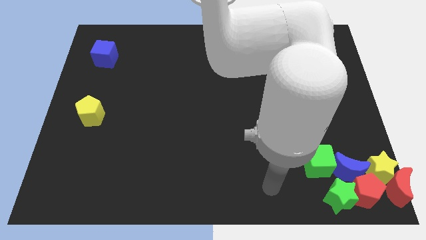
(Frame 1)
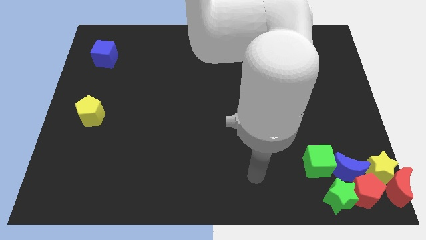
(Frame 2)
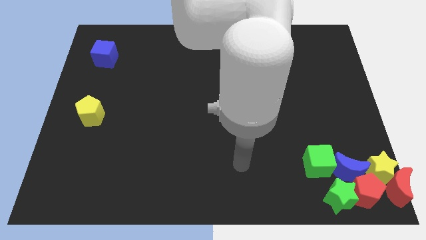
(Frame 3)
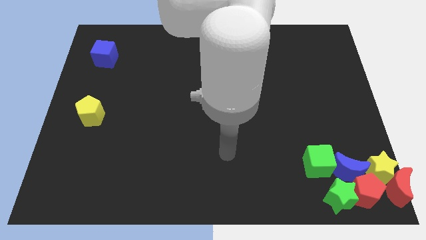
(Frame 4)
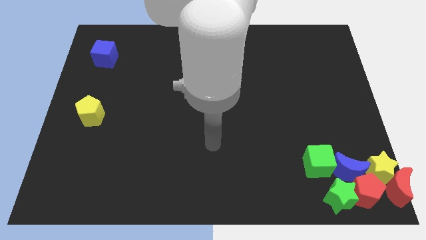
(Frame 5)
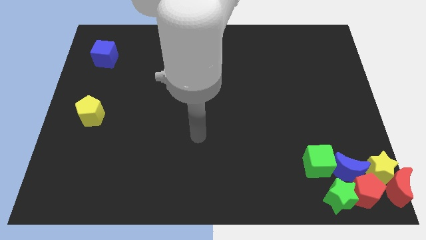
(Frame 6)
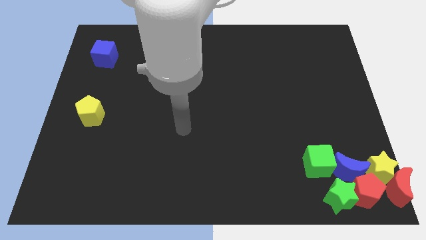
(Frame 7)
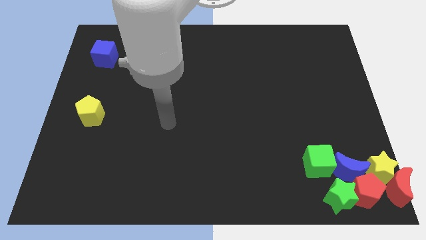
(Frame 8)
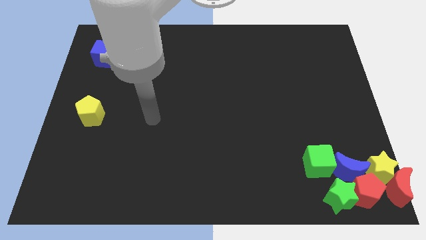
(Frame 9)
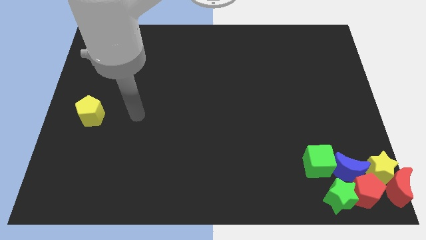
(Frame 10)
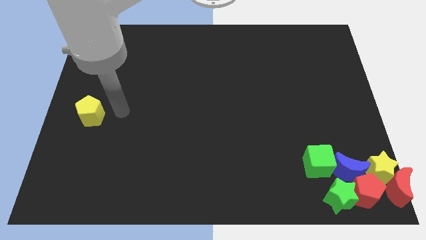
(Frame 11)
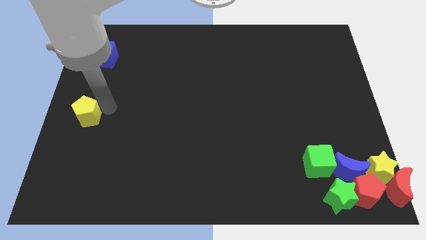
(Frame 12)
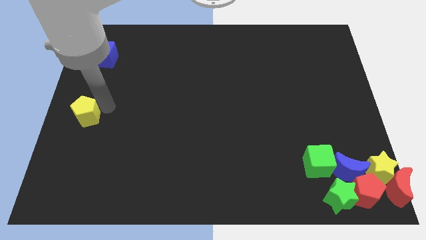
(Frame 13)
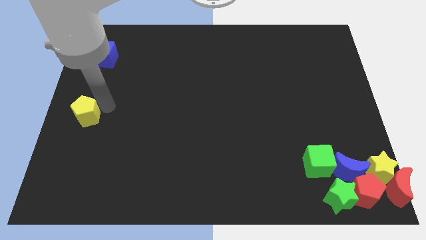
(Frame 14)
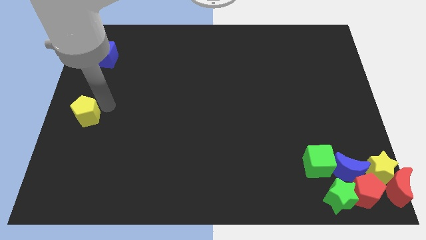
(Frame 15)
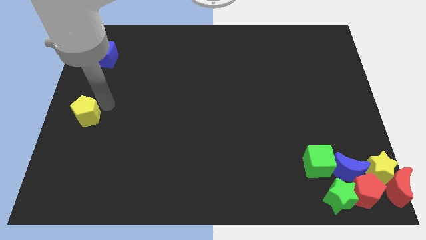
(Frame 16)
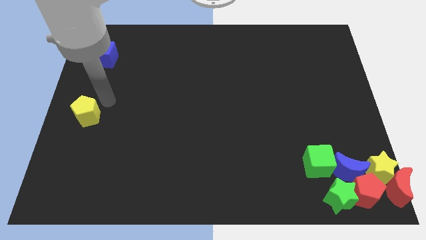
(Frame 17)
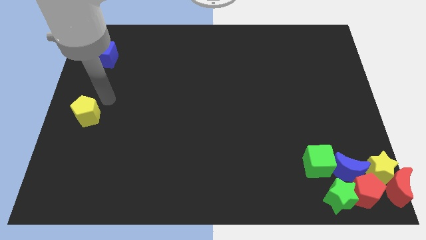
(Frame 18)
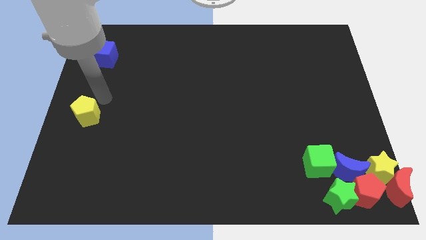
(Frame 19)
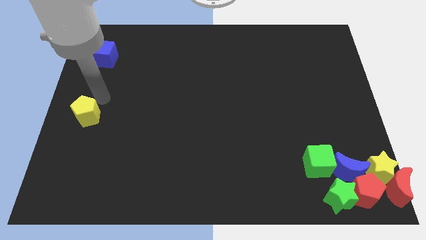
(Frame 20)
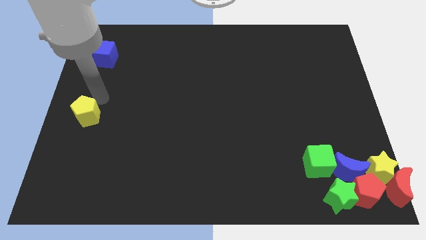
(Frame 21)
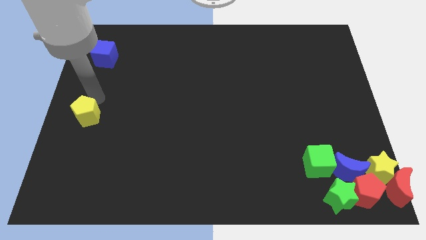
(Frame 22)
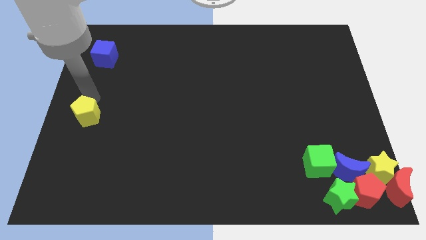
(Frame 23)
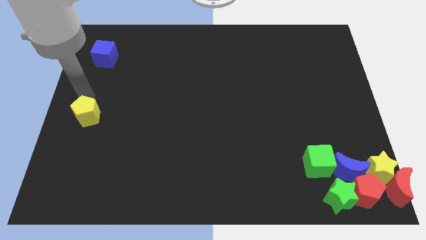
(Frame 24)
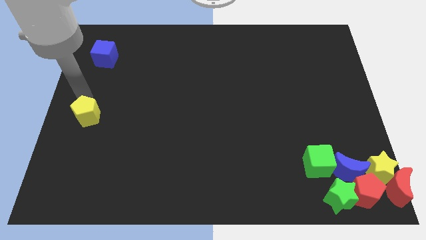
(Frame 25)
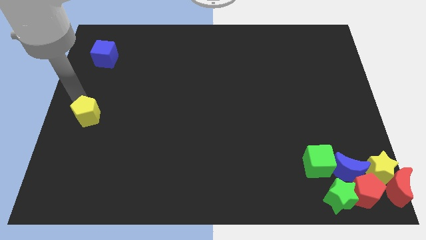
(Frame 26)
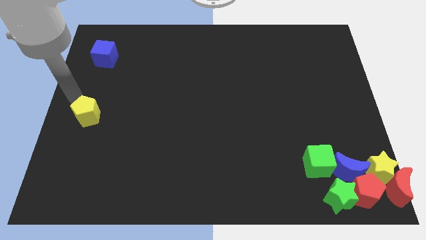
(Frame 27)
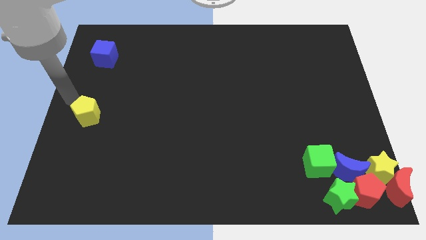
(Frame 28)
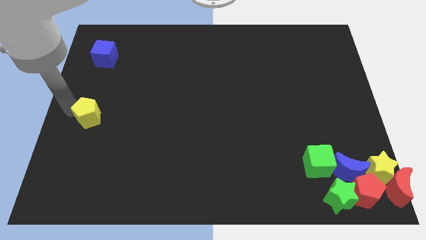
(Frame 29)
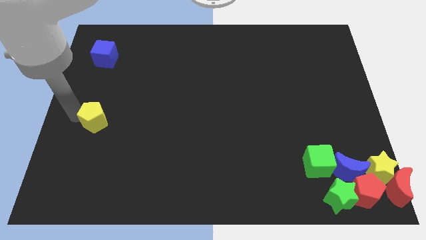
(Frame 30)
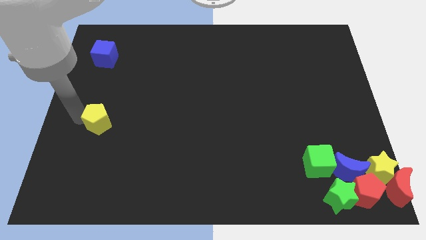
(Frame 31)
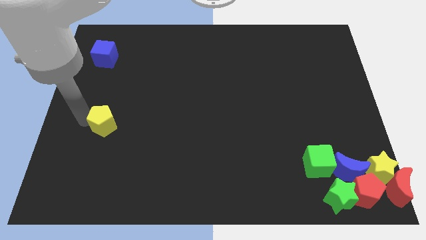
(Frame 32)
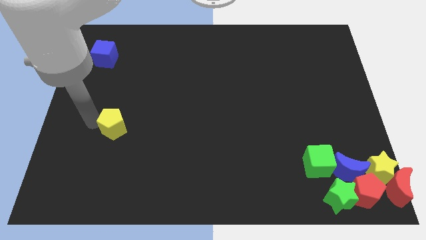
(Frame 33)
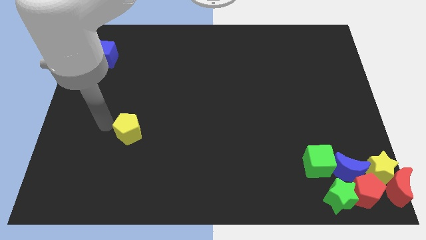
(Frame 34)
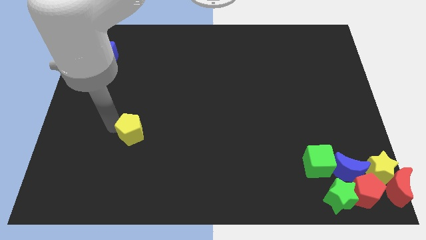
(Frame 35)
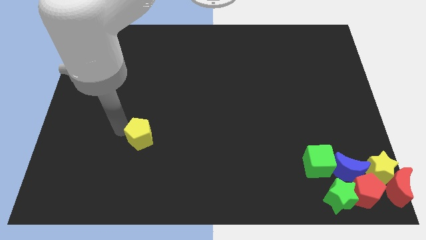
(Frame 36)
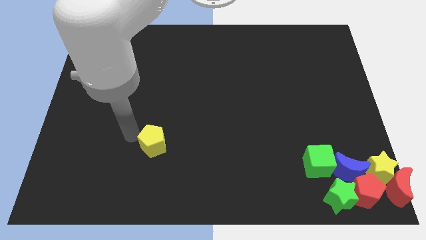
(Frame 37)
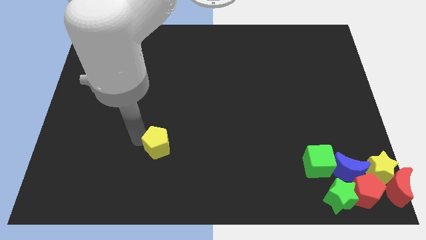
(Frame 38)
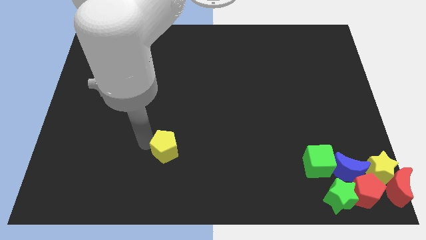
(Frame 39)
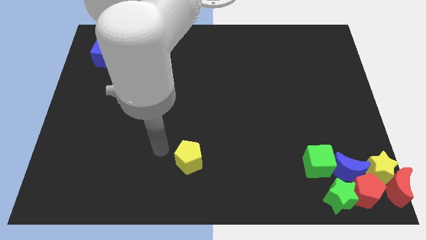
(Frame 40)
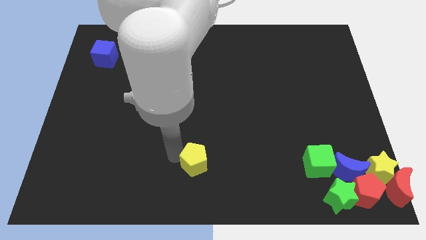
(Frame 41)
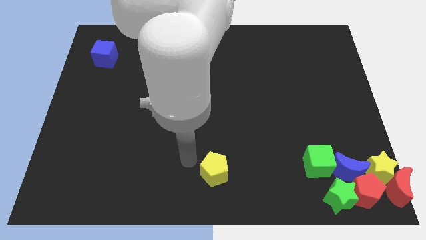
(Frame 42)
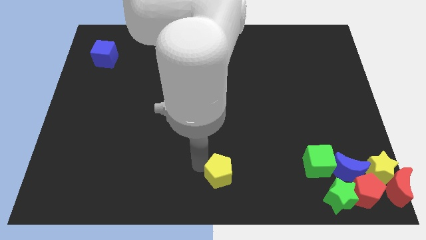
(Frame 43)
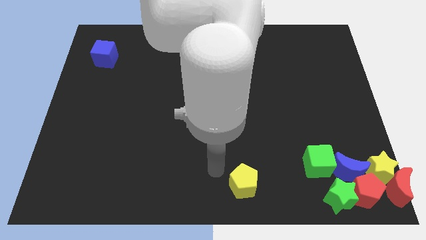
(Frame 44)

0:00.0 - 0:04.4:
move yellow pentagon towards the bottom of the board

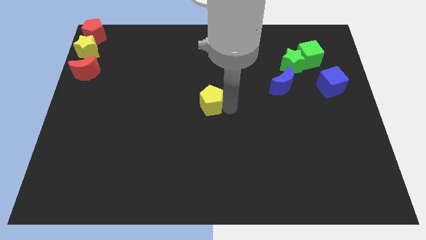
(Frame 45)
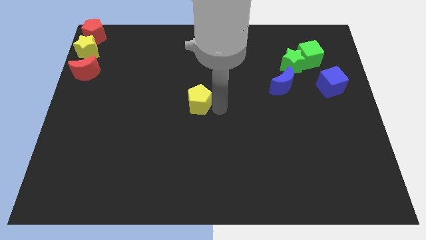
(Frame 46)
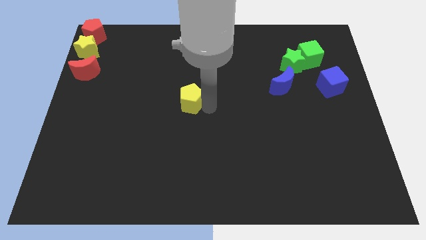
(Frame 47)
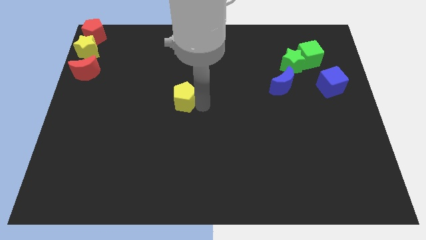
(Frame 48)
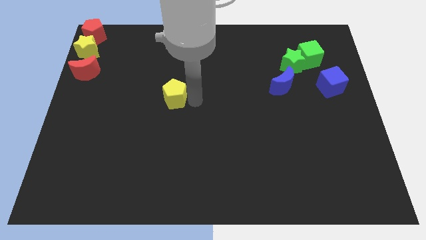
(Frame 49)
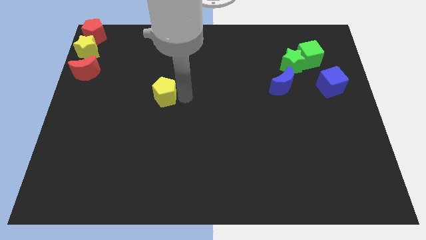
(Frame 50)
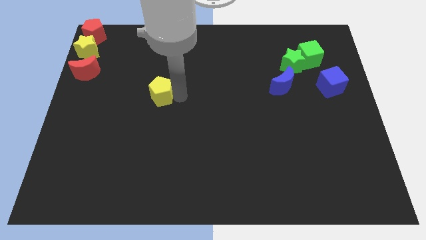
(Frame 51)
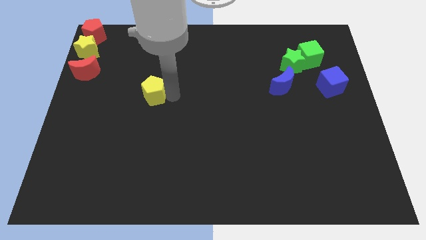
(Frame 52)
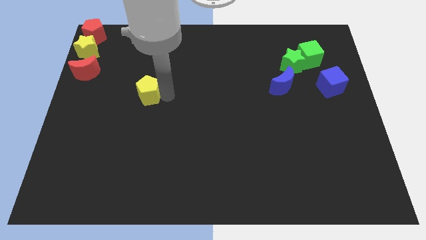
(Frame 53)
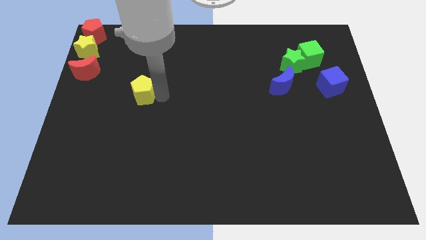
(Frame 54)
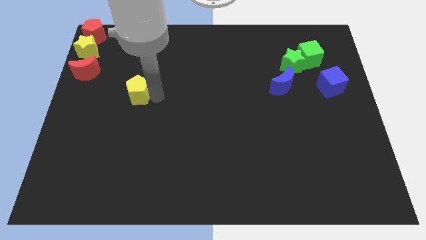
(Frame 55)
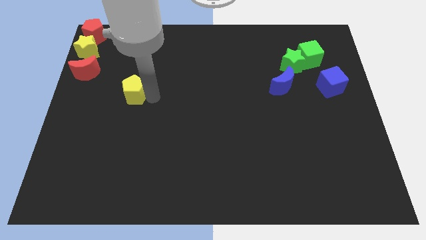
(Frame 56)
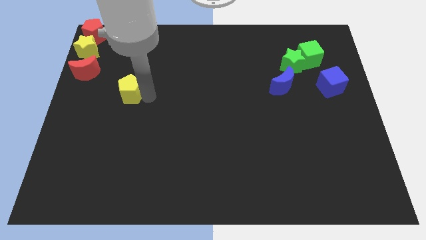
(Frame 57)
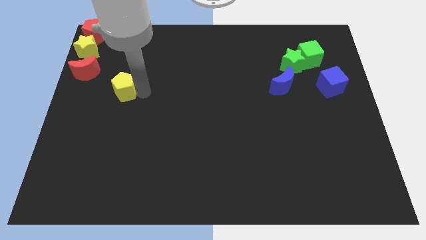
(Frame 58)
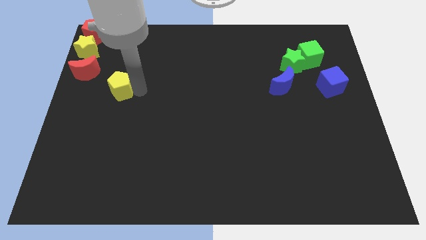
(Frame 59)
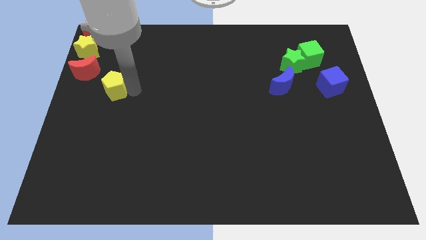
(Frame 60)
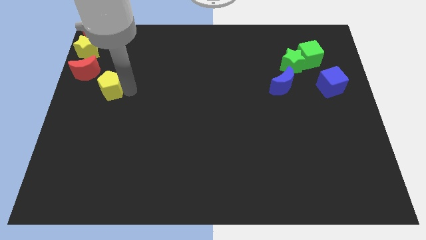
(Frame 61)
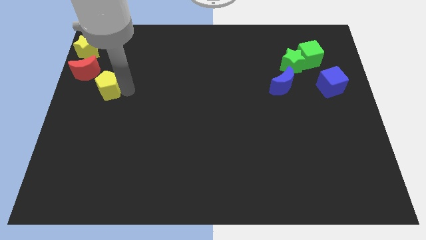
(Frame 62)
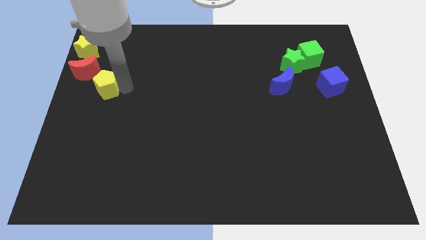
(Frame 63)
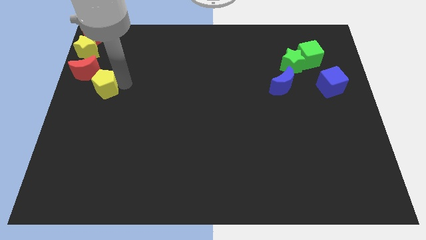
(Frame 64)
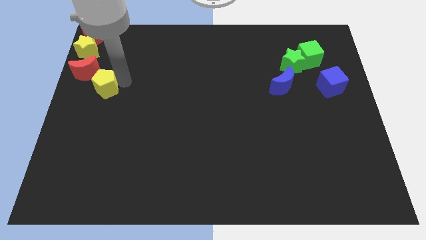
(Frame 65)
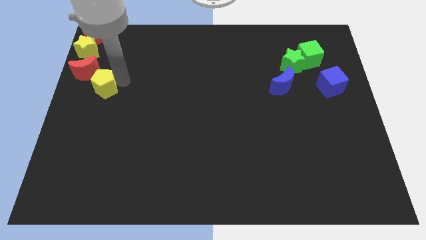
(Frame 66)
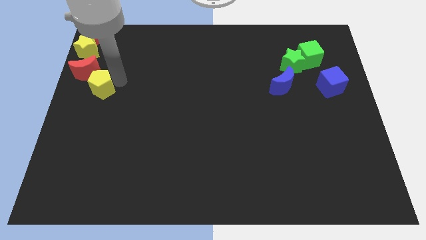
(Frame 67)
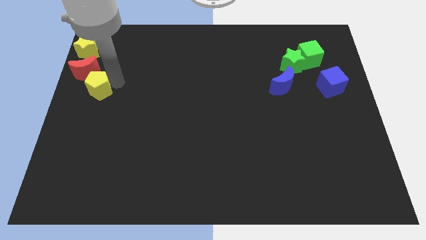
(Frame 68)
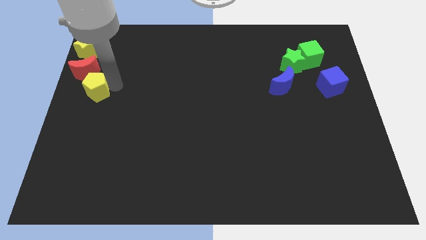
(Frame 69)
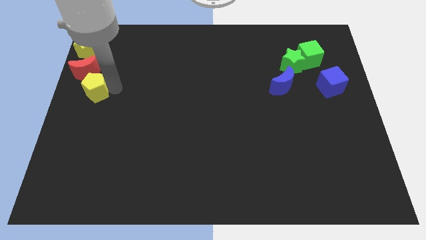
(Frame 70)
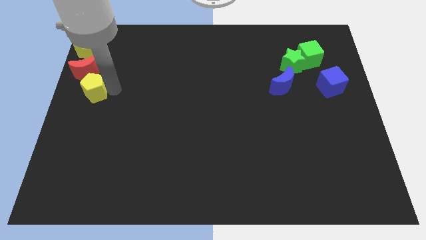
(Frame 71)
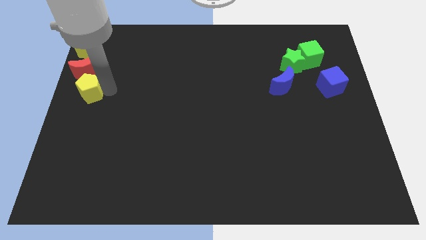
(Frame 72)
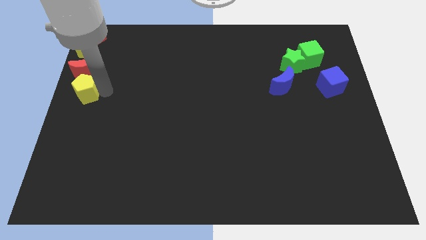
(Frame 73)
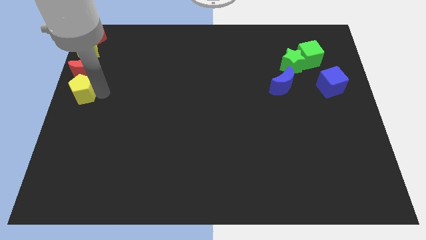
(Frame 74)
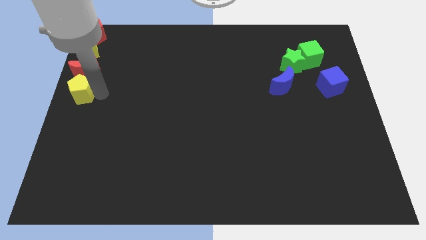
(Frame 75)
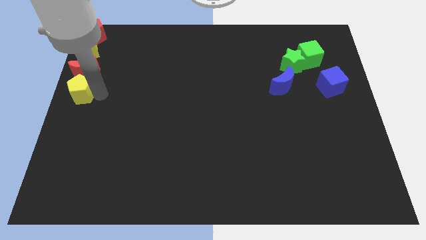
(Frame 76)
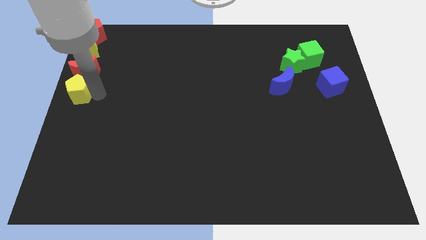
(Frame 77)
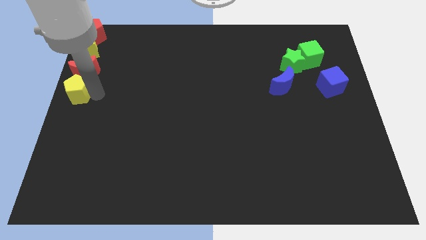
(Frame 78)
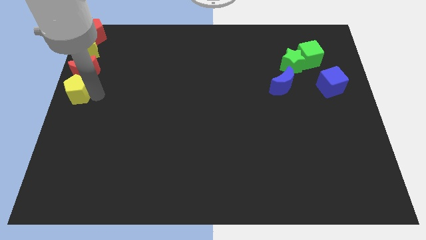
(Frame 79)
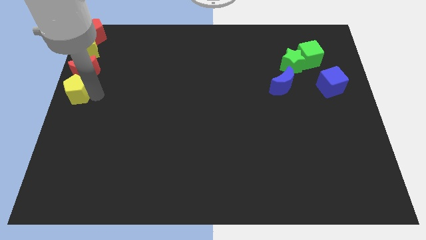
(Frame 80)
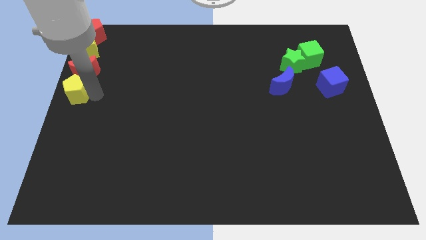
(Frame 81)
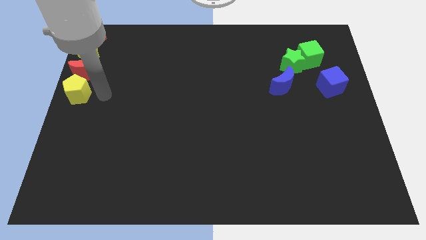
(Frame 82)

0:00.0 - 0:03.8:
place the yellow pentagon below the red moon

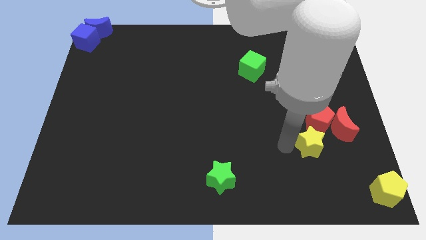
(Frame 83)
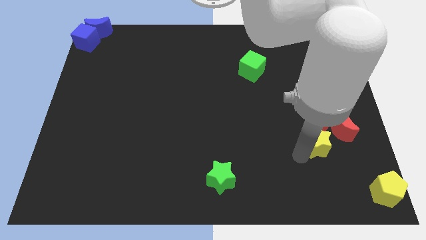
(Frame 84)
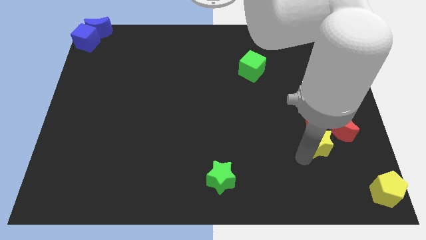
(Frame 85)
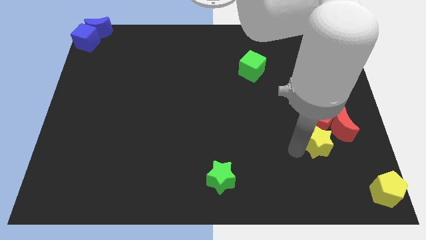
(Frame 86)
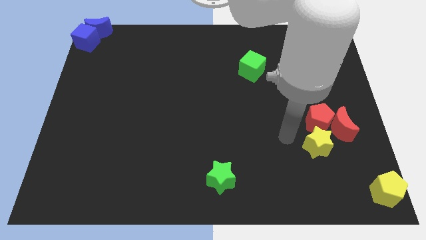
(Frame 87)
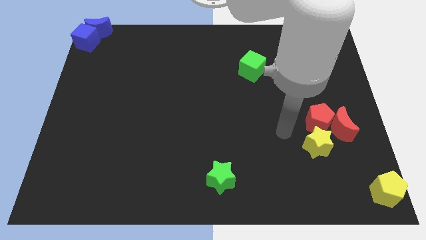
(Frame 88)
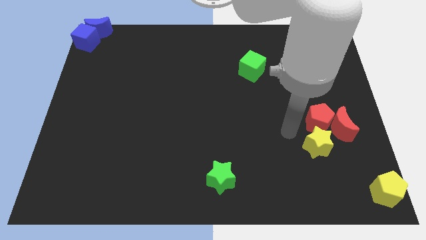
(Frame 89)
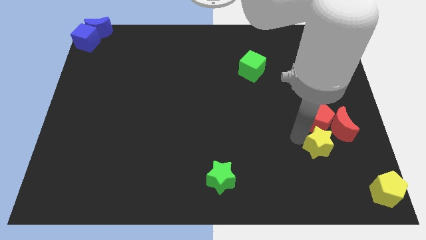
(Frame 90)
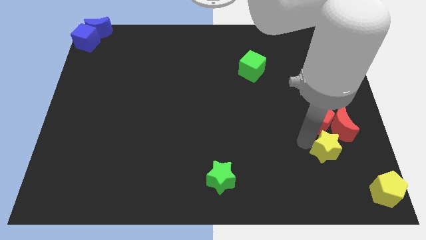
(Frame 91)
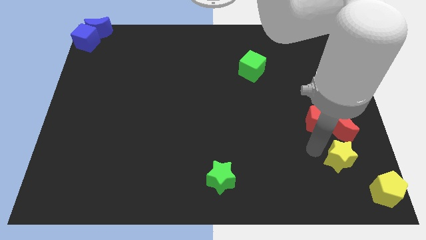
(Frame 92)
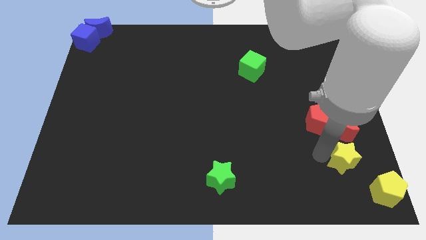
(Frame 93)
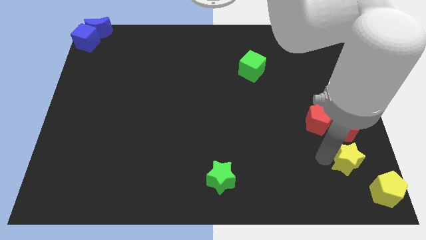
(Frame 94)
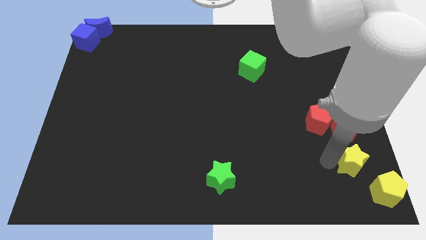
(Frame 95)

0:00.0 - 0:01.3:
push the yellow star to the bottom of the red crescent
